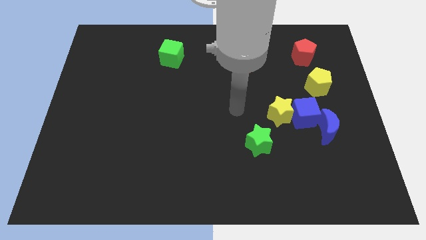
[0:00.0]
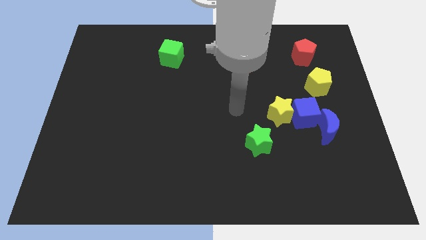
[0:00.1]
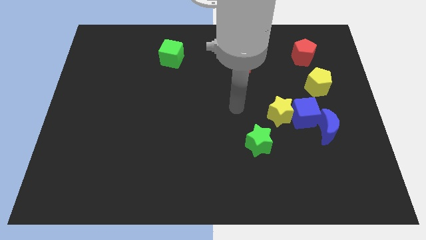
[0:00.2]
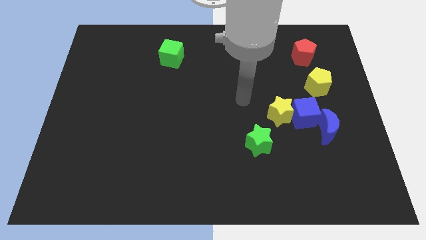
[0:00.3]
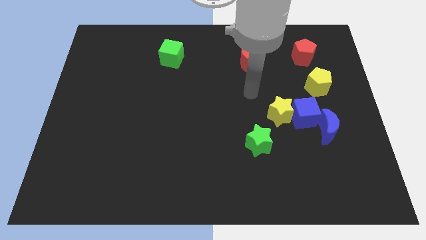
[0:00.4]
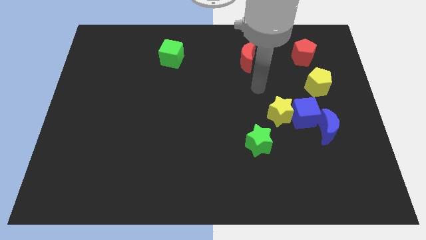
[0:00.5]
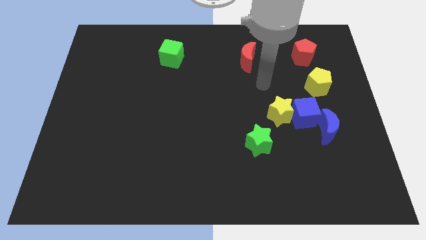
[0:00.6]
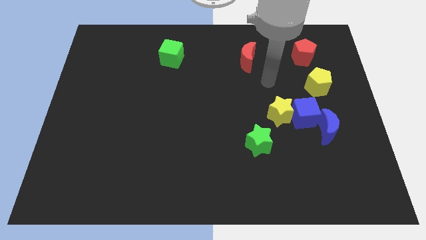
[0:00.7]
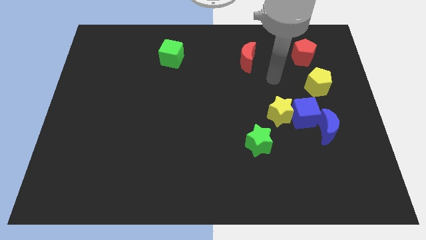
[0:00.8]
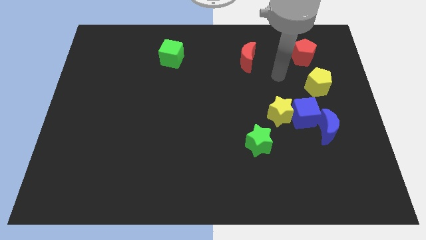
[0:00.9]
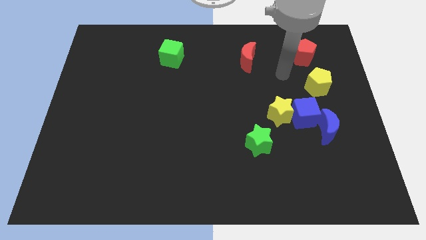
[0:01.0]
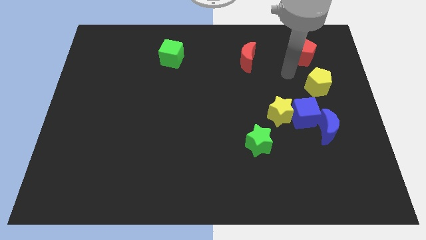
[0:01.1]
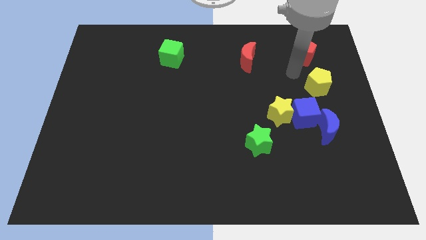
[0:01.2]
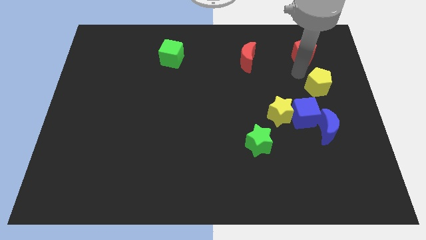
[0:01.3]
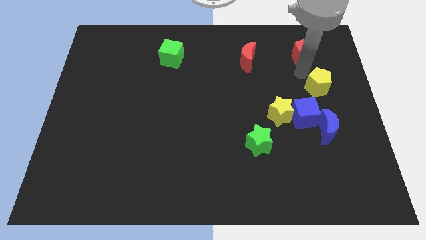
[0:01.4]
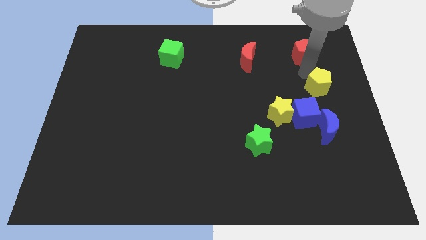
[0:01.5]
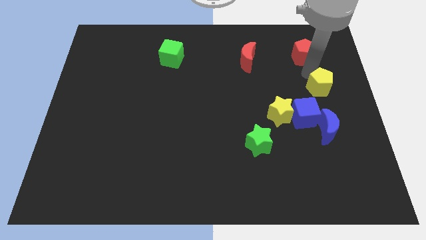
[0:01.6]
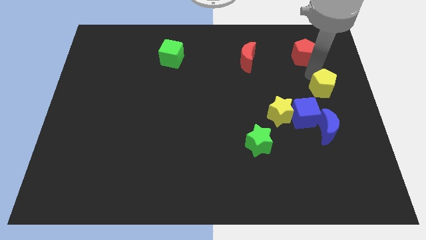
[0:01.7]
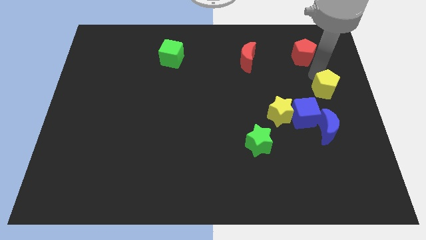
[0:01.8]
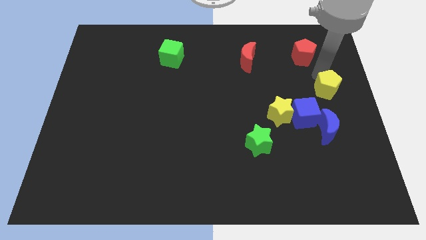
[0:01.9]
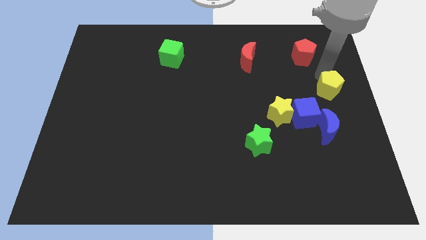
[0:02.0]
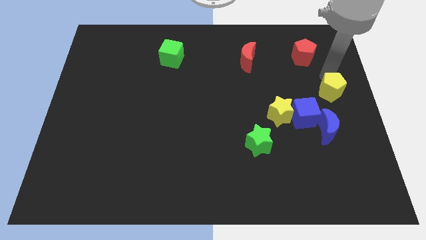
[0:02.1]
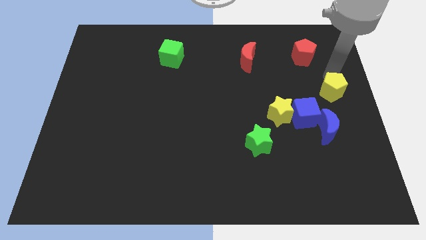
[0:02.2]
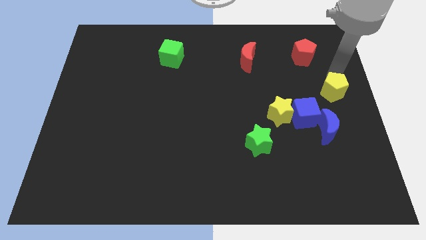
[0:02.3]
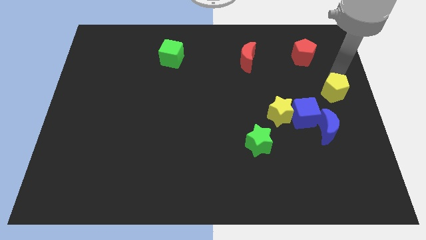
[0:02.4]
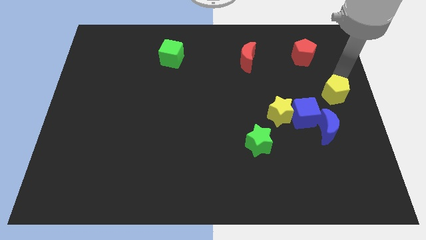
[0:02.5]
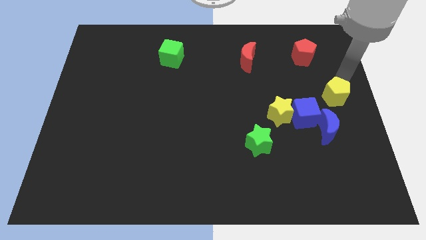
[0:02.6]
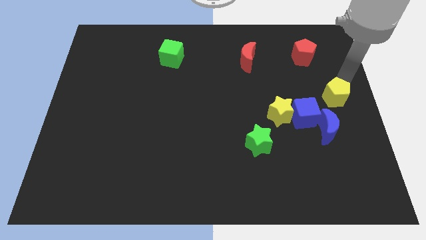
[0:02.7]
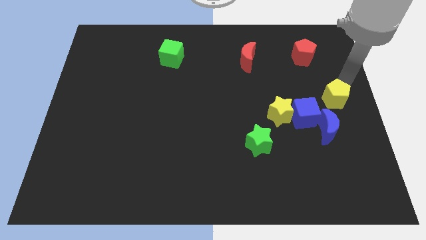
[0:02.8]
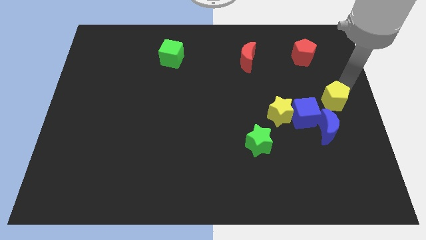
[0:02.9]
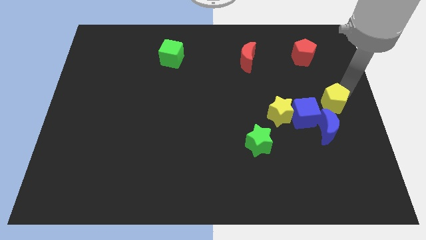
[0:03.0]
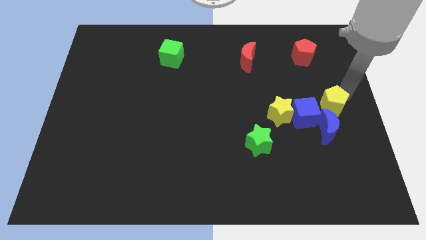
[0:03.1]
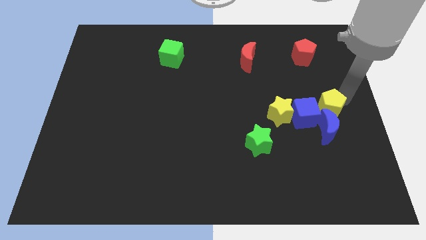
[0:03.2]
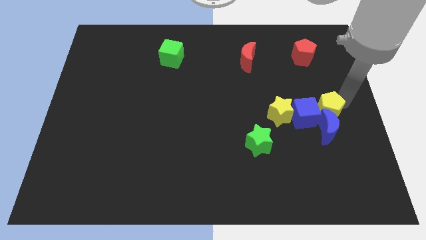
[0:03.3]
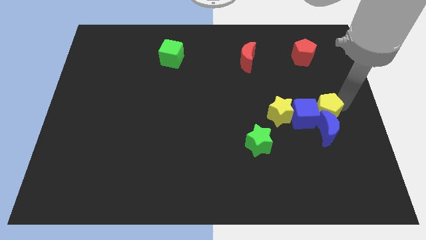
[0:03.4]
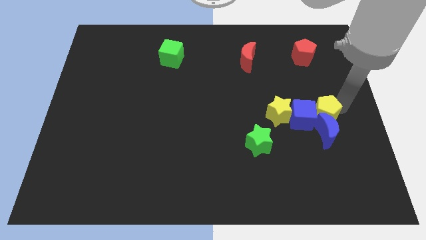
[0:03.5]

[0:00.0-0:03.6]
slide the yellow pentagon next to the blue moon

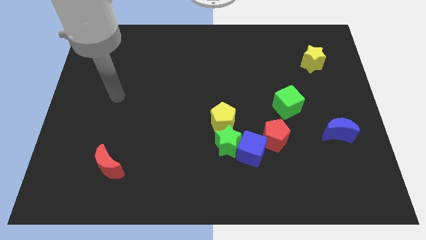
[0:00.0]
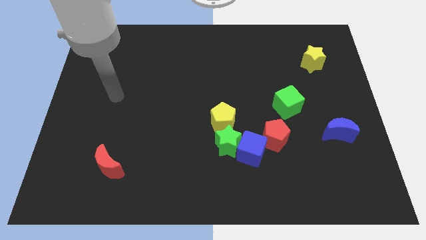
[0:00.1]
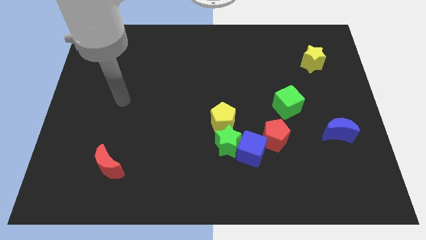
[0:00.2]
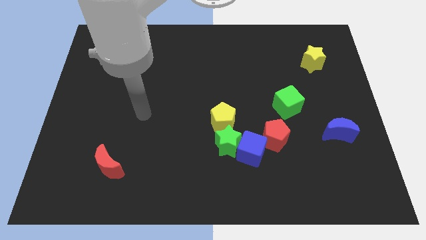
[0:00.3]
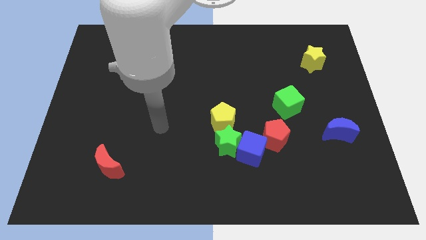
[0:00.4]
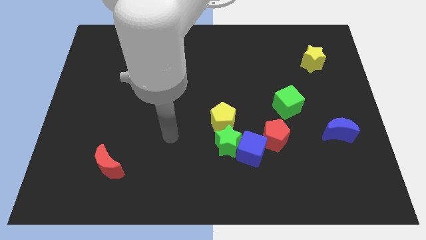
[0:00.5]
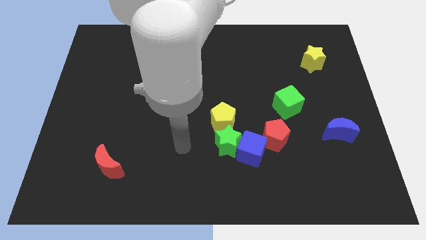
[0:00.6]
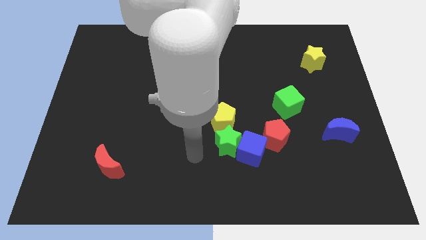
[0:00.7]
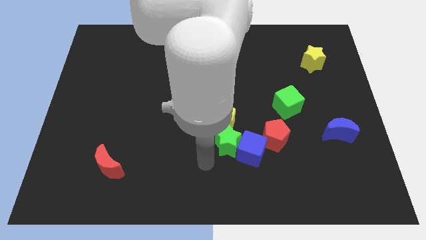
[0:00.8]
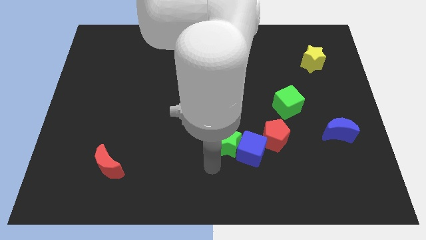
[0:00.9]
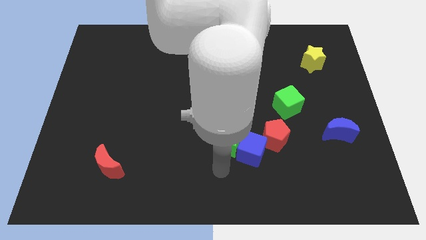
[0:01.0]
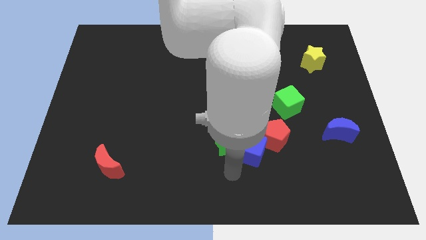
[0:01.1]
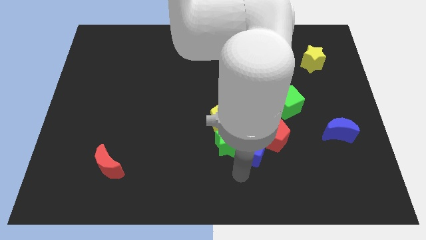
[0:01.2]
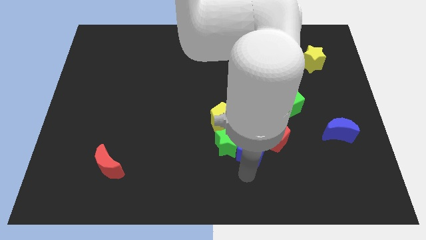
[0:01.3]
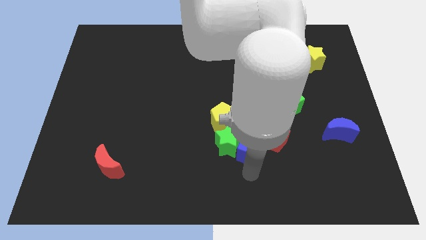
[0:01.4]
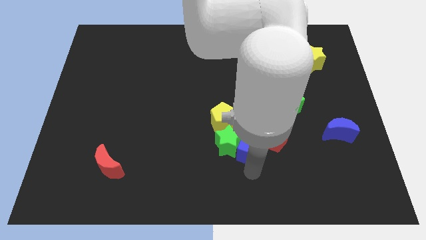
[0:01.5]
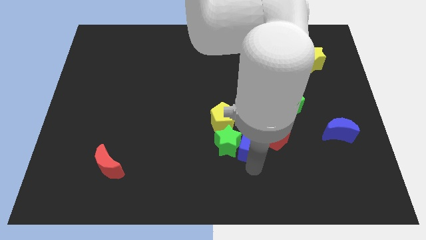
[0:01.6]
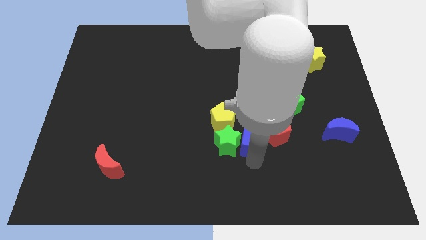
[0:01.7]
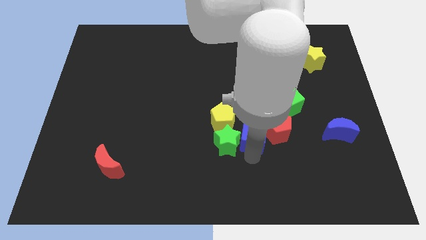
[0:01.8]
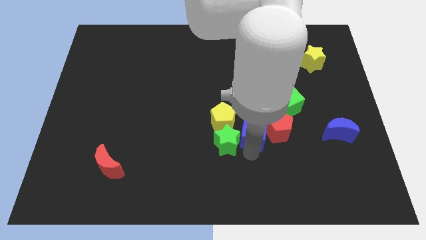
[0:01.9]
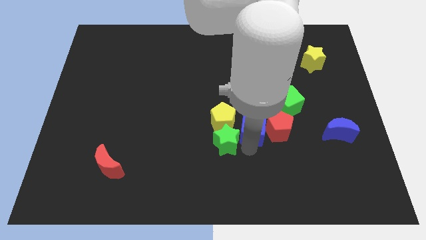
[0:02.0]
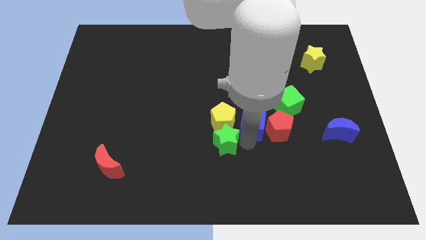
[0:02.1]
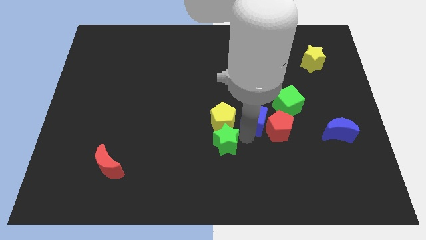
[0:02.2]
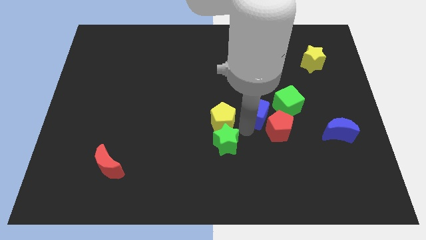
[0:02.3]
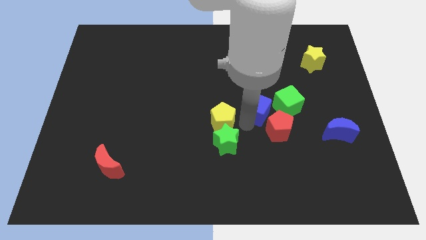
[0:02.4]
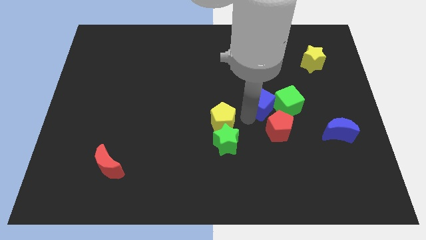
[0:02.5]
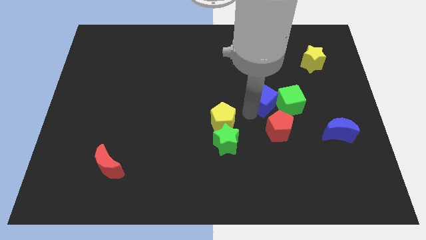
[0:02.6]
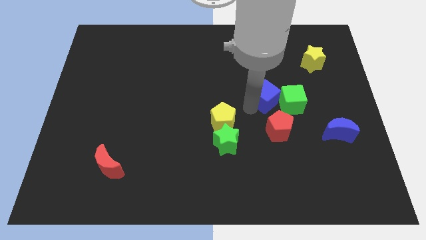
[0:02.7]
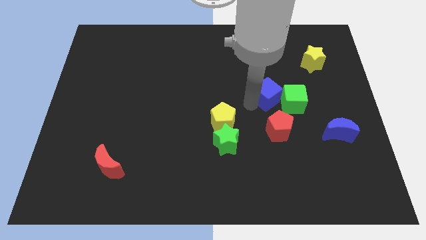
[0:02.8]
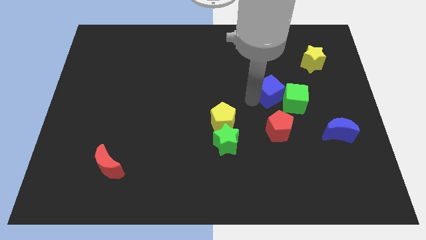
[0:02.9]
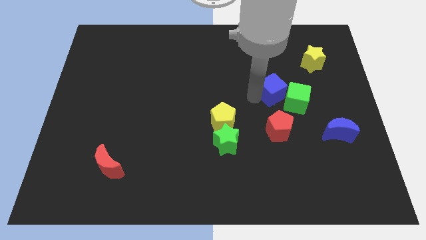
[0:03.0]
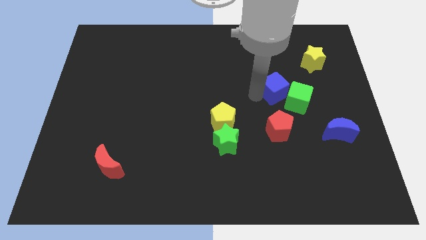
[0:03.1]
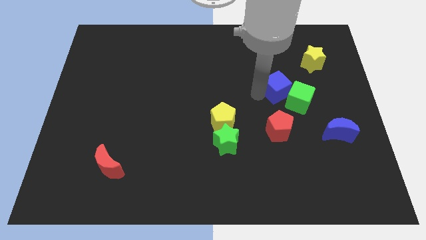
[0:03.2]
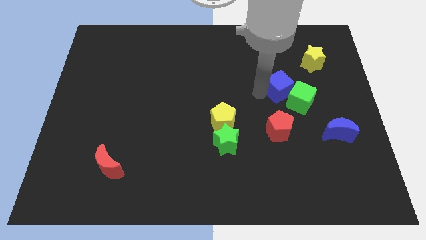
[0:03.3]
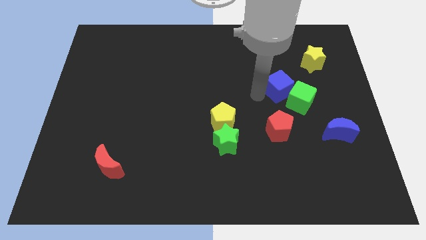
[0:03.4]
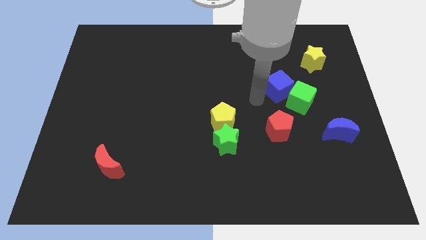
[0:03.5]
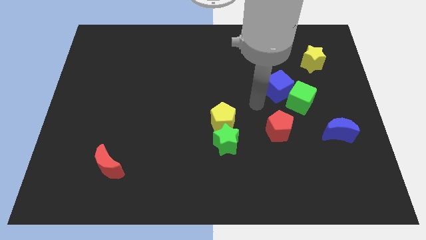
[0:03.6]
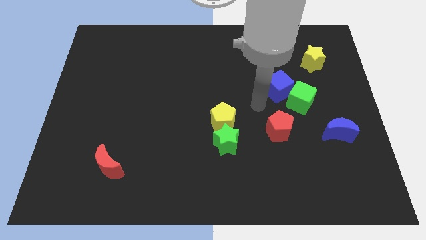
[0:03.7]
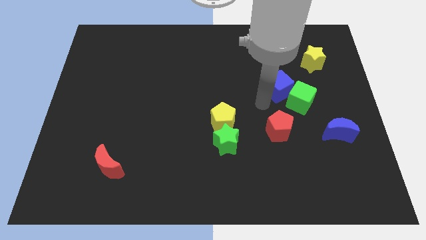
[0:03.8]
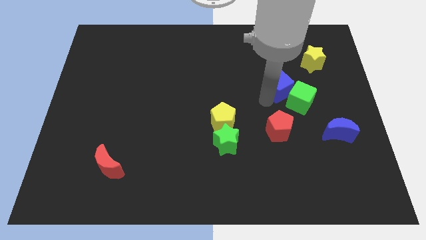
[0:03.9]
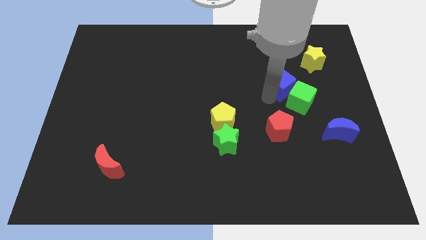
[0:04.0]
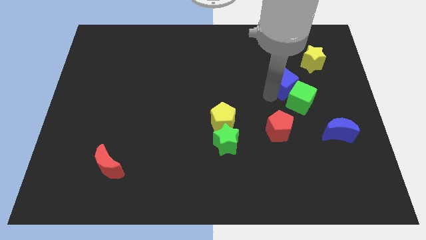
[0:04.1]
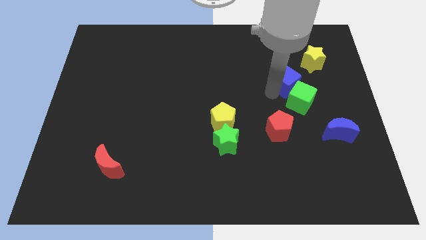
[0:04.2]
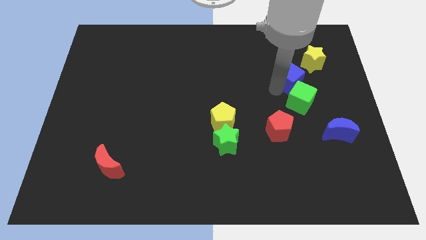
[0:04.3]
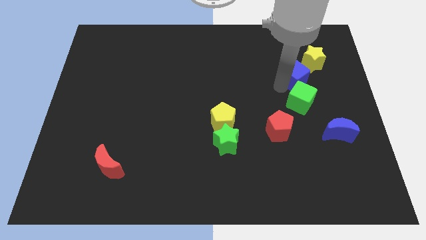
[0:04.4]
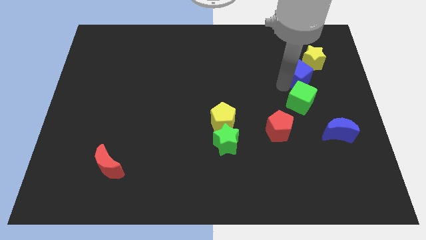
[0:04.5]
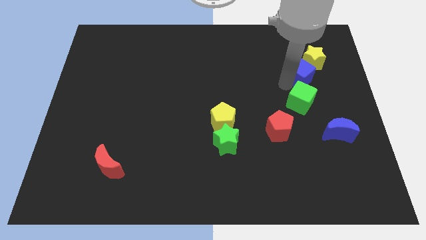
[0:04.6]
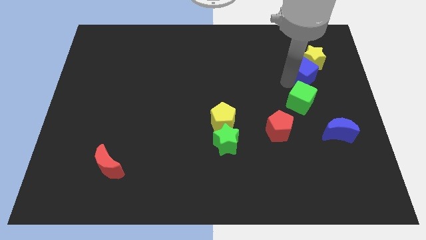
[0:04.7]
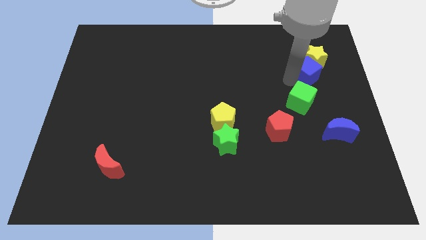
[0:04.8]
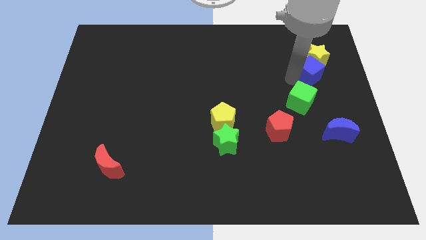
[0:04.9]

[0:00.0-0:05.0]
slide the blue cube next to the yellow star
